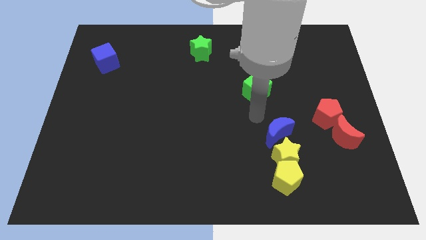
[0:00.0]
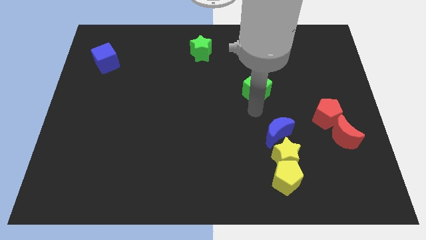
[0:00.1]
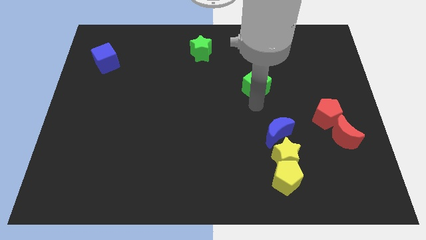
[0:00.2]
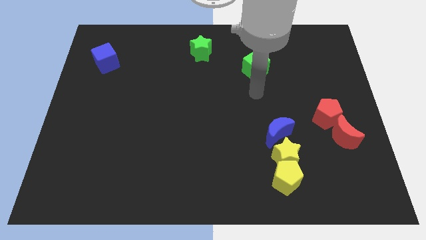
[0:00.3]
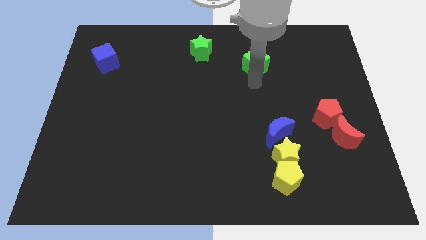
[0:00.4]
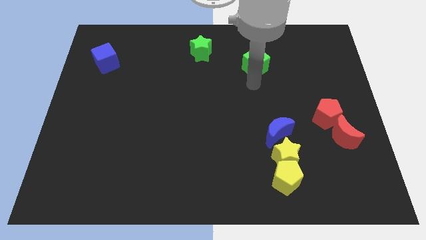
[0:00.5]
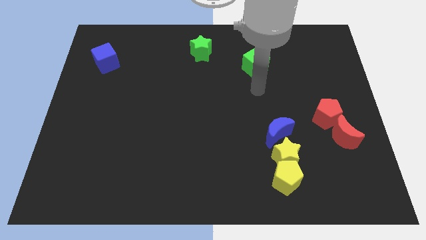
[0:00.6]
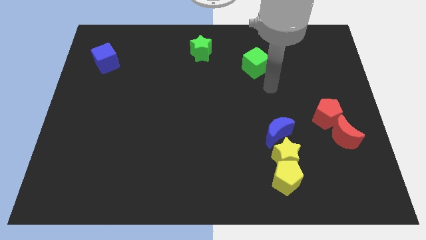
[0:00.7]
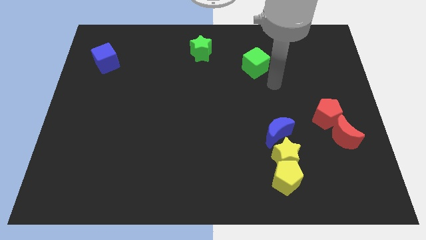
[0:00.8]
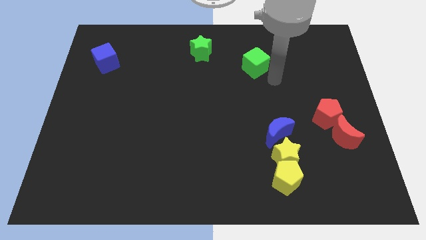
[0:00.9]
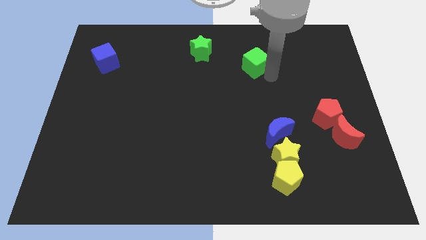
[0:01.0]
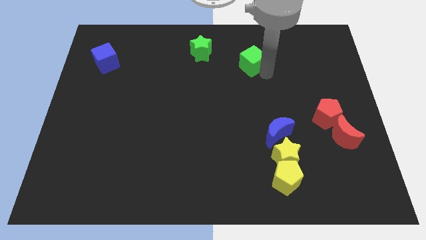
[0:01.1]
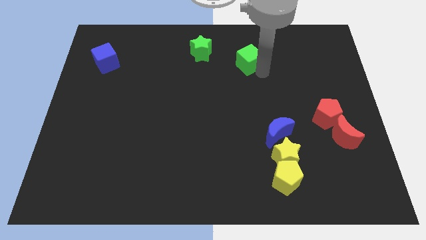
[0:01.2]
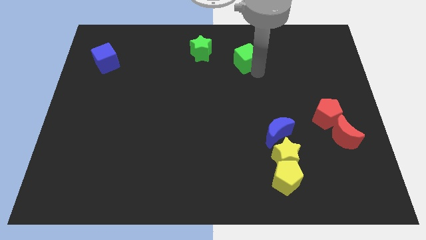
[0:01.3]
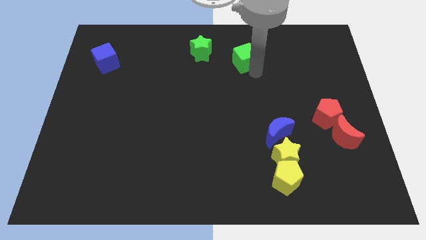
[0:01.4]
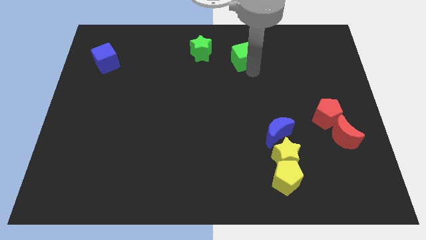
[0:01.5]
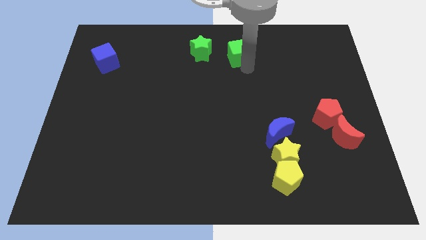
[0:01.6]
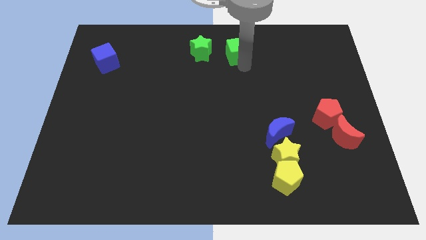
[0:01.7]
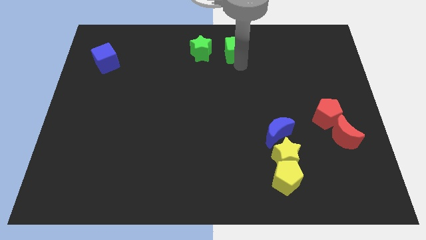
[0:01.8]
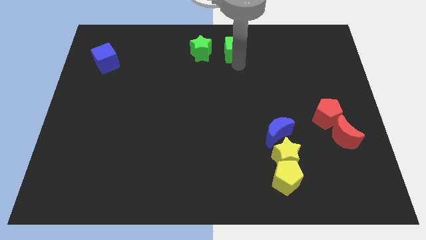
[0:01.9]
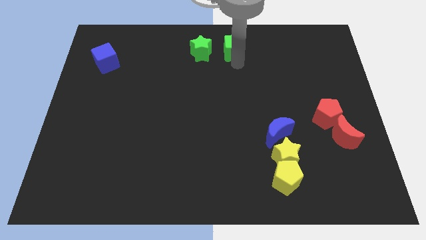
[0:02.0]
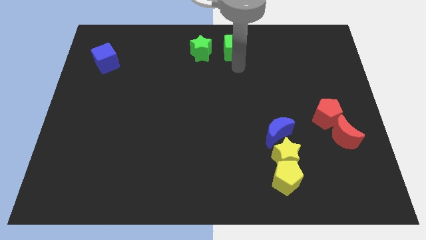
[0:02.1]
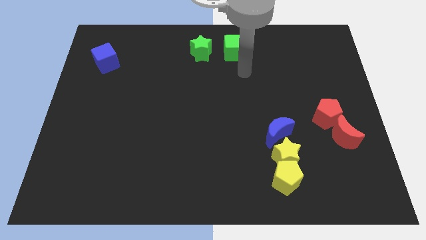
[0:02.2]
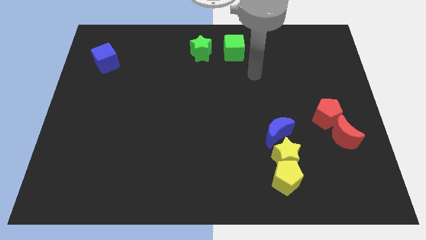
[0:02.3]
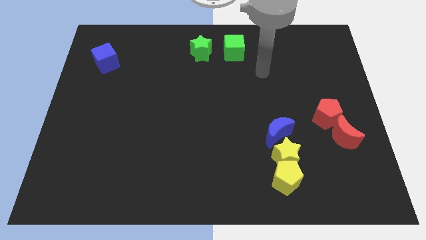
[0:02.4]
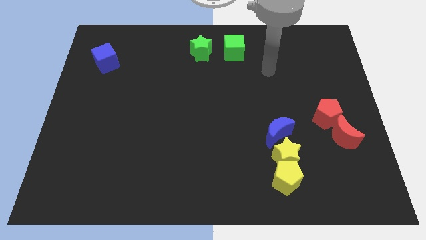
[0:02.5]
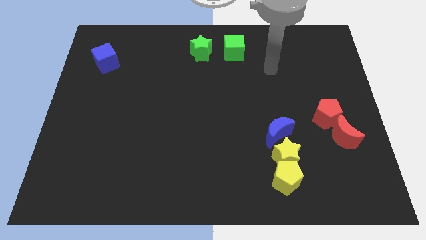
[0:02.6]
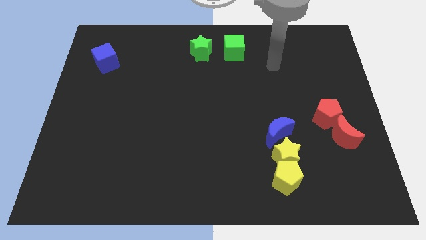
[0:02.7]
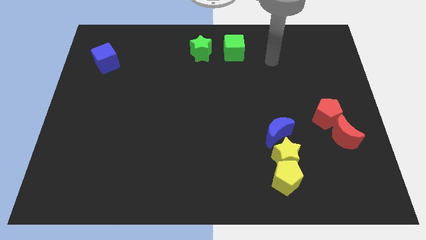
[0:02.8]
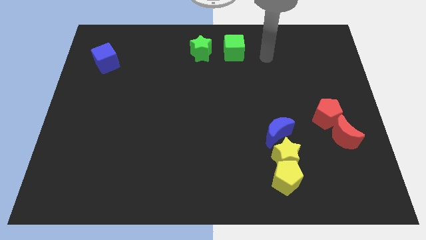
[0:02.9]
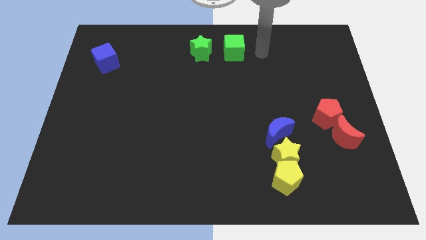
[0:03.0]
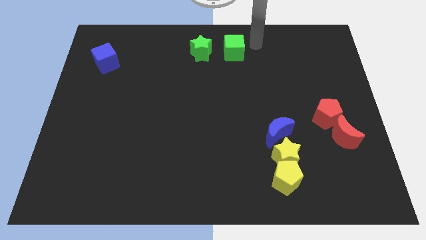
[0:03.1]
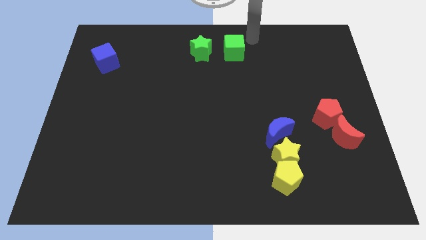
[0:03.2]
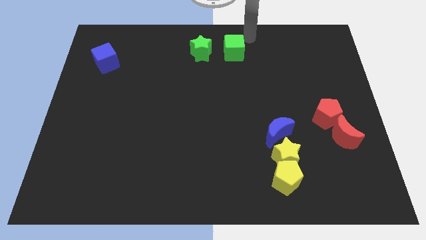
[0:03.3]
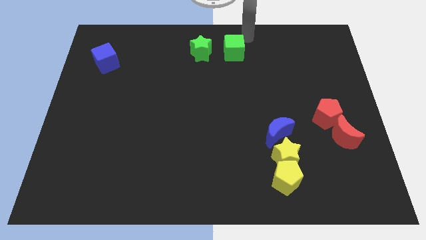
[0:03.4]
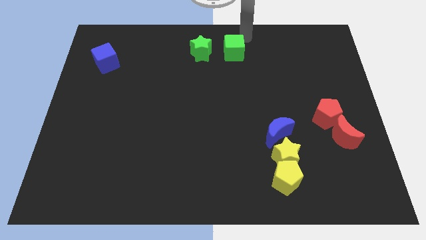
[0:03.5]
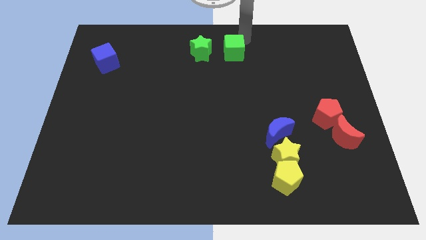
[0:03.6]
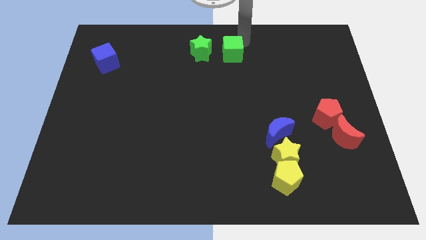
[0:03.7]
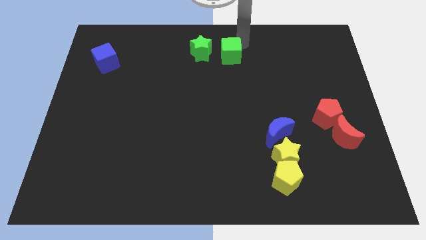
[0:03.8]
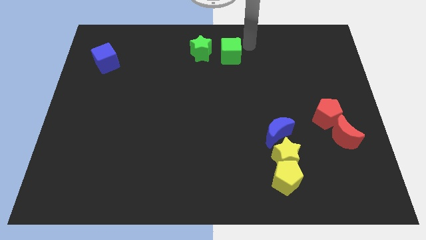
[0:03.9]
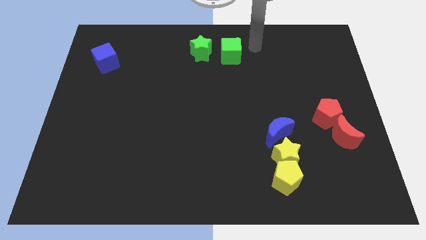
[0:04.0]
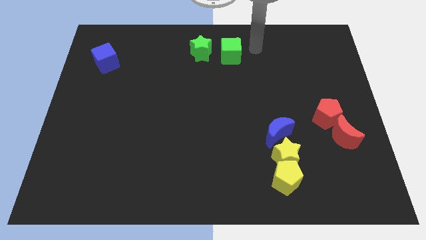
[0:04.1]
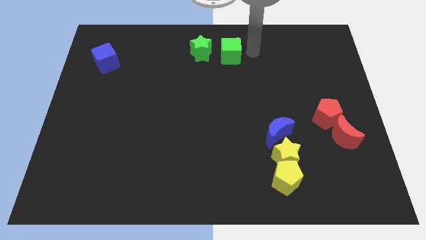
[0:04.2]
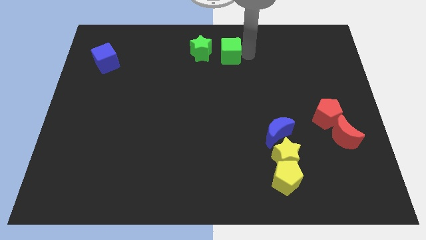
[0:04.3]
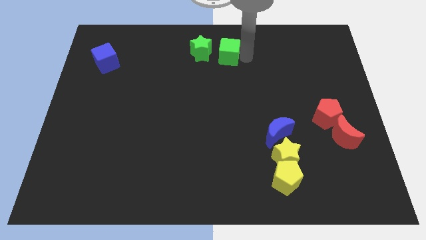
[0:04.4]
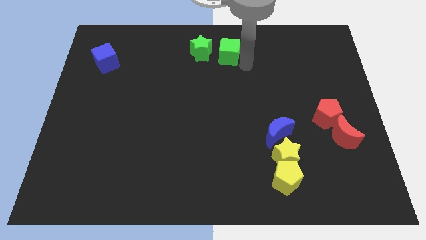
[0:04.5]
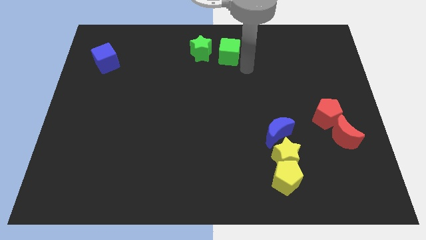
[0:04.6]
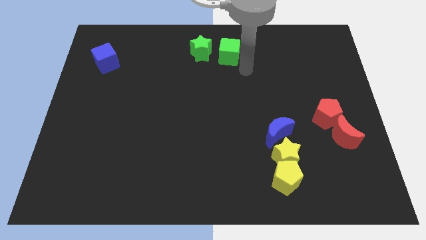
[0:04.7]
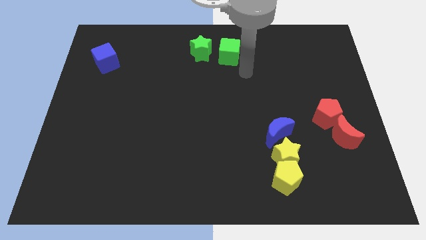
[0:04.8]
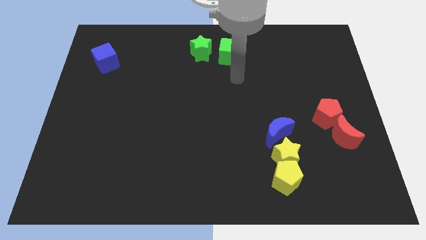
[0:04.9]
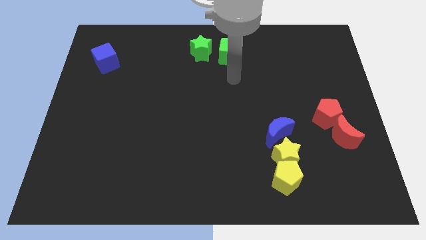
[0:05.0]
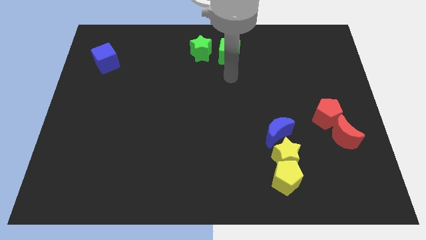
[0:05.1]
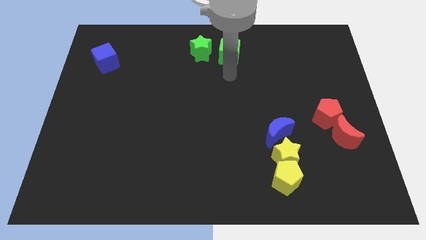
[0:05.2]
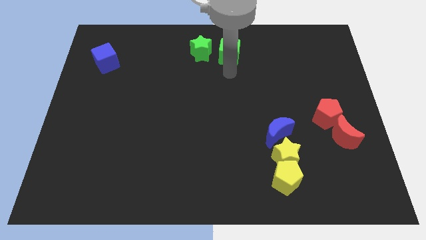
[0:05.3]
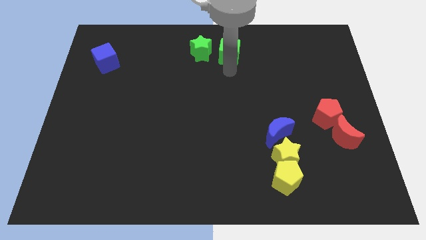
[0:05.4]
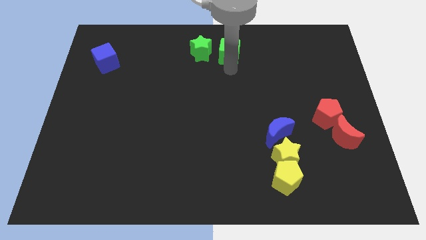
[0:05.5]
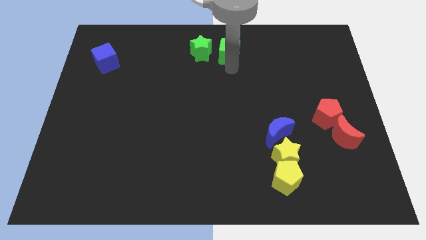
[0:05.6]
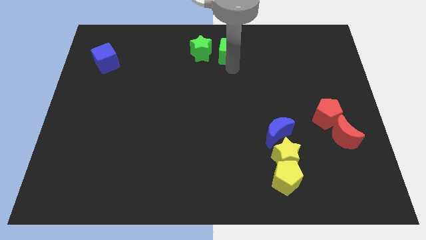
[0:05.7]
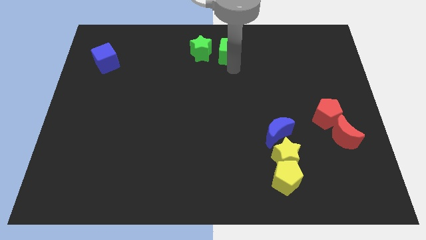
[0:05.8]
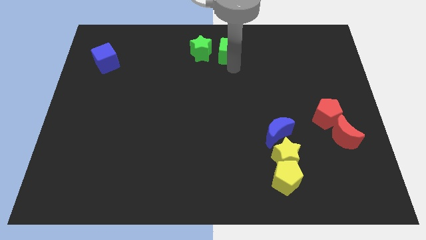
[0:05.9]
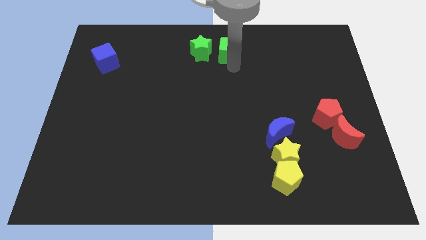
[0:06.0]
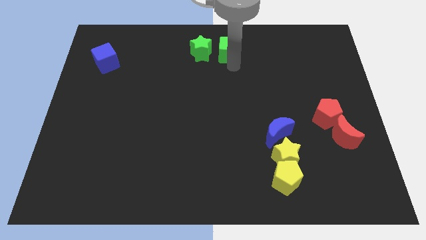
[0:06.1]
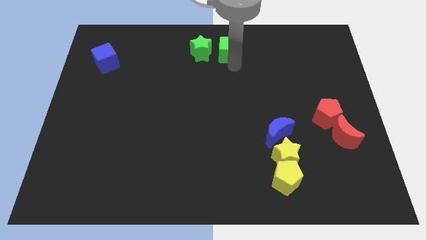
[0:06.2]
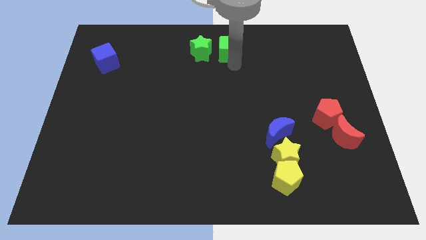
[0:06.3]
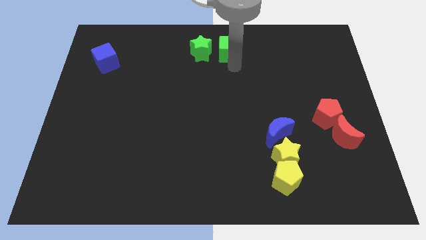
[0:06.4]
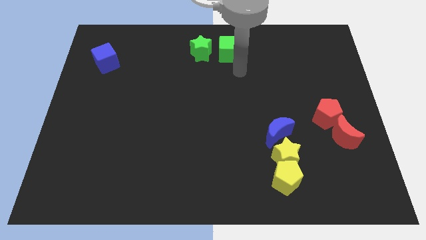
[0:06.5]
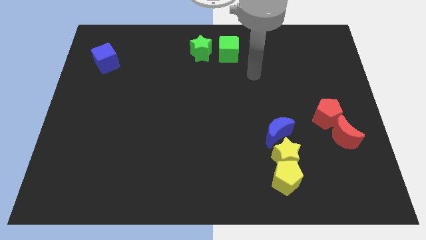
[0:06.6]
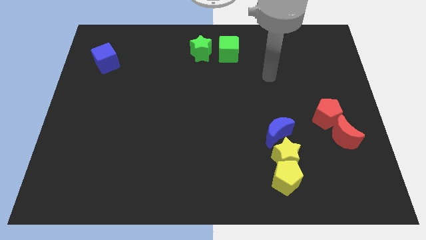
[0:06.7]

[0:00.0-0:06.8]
move the green cube to the right side of the green star

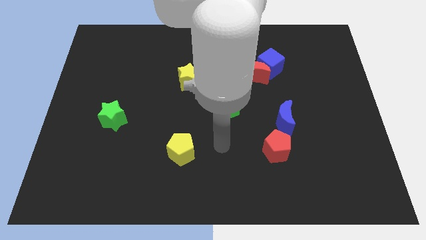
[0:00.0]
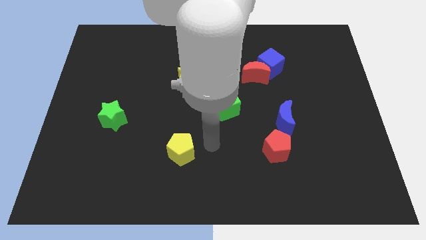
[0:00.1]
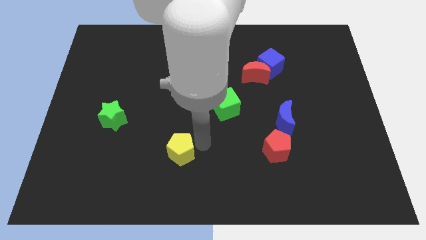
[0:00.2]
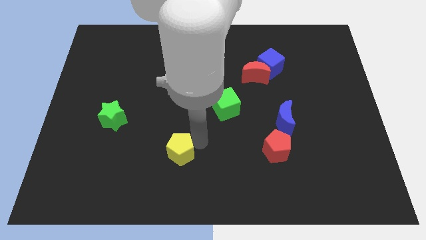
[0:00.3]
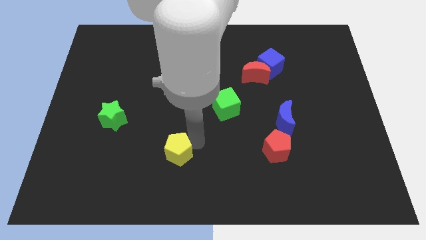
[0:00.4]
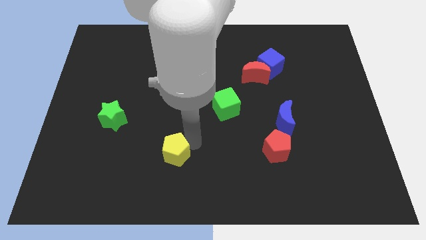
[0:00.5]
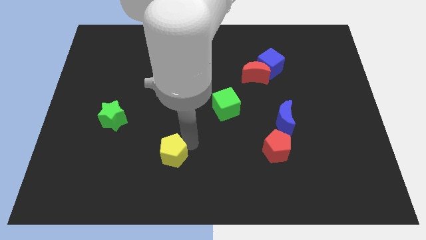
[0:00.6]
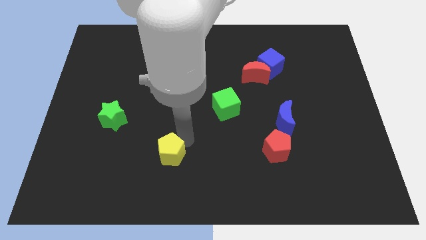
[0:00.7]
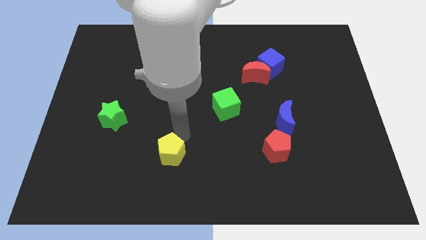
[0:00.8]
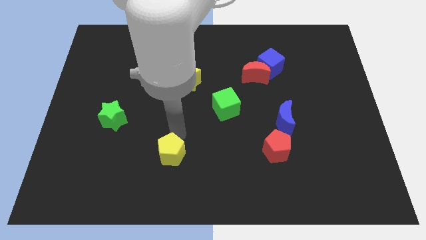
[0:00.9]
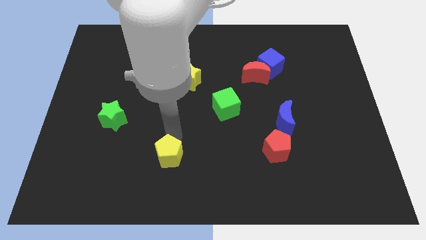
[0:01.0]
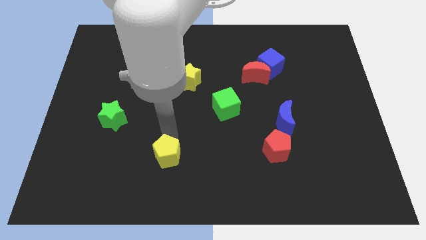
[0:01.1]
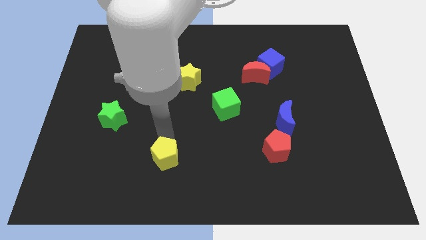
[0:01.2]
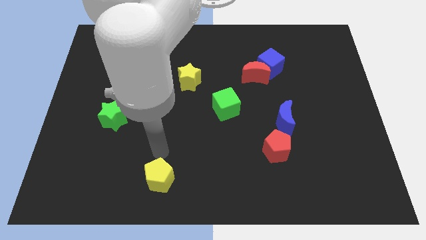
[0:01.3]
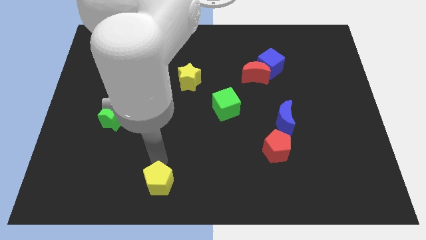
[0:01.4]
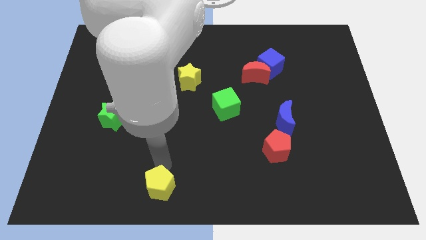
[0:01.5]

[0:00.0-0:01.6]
push the yellow pentagon towards the bottom side

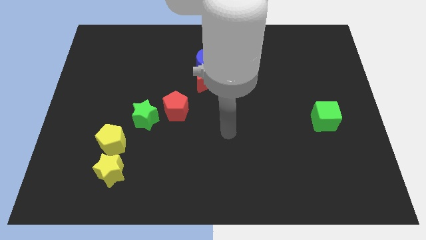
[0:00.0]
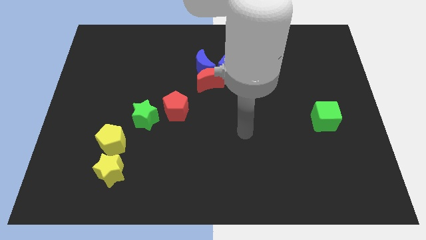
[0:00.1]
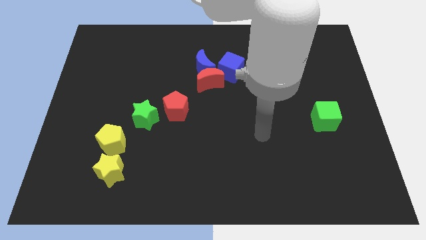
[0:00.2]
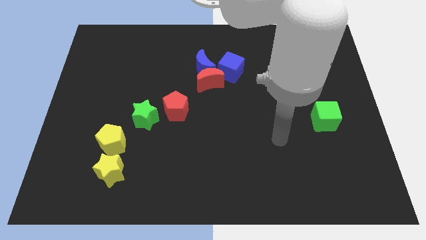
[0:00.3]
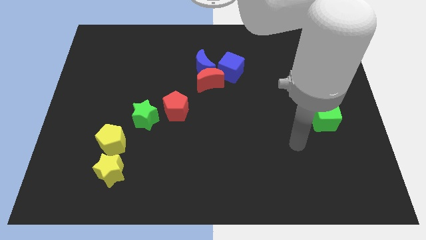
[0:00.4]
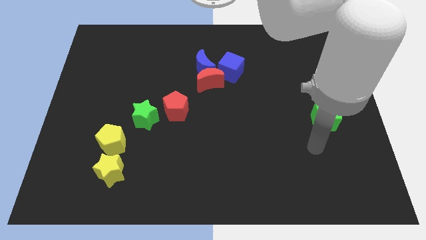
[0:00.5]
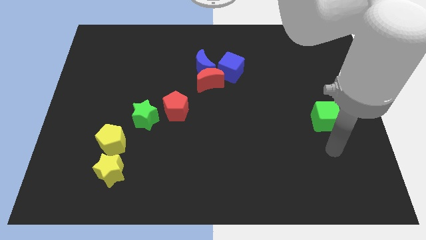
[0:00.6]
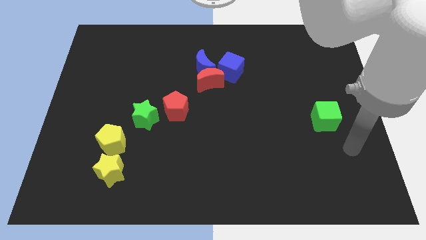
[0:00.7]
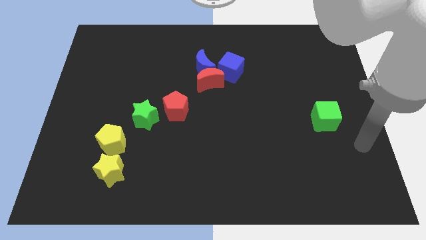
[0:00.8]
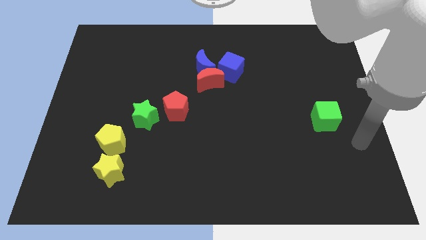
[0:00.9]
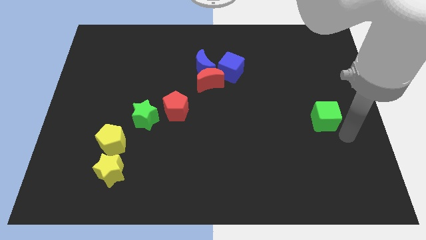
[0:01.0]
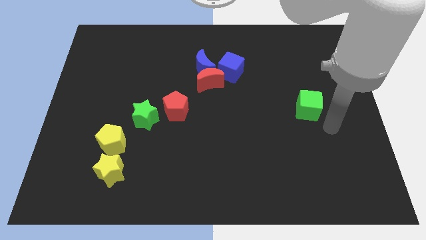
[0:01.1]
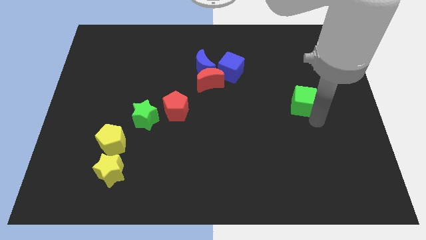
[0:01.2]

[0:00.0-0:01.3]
move the arm towards the green cube
